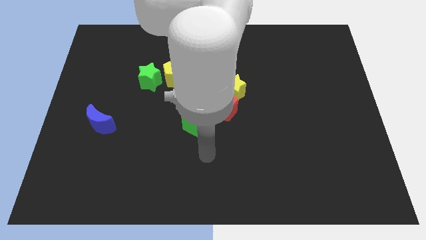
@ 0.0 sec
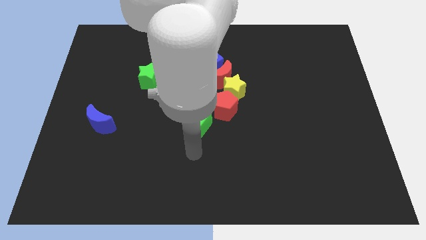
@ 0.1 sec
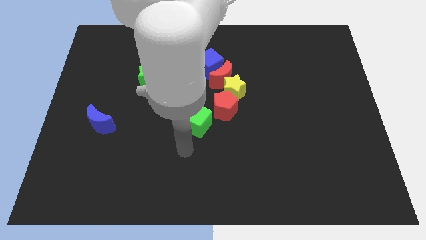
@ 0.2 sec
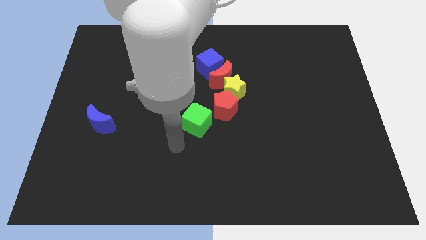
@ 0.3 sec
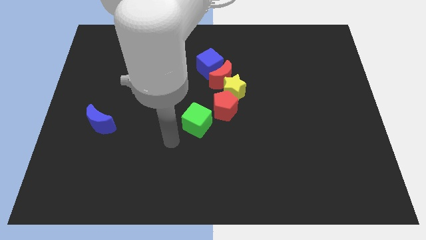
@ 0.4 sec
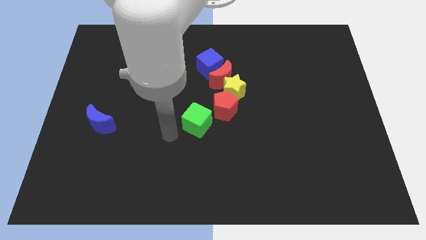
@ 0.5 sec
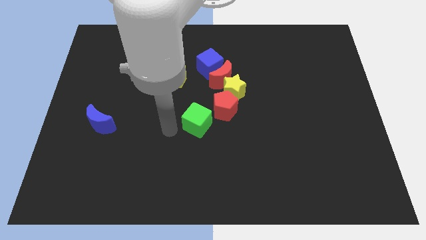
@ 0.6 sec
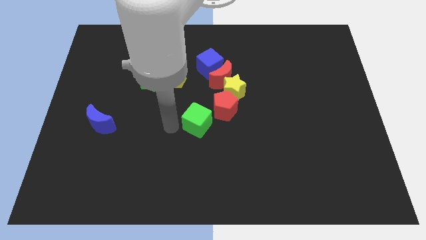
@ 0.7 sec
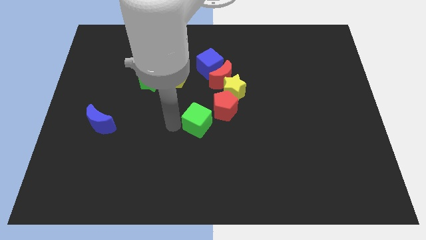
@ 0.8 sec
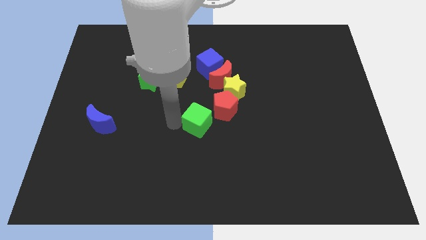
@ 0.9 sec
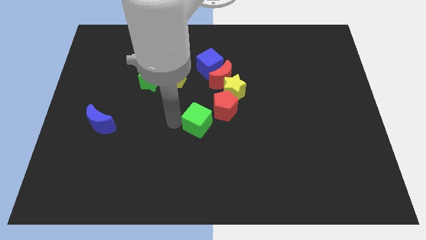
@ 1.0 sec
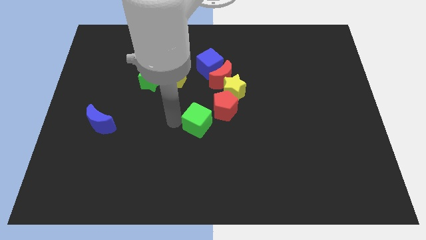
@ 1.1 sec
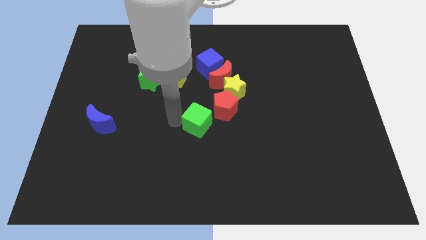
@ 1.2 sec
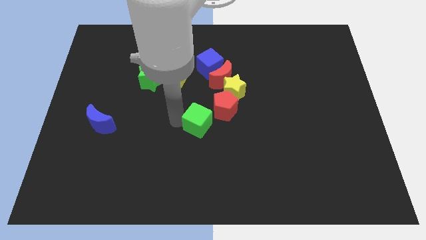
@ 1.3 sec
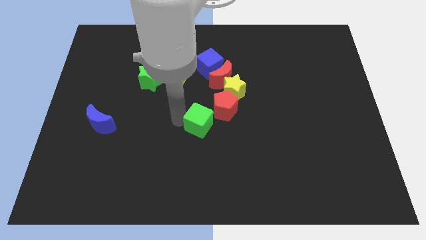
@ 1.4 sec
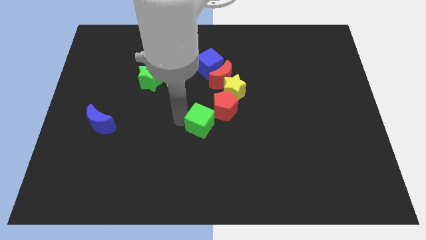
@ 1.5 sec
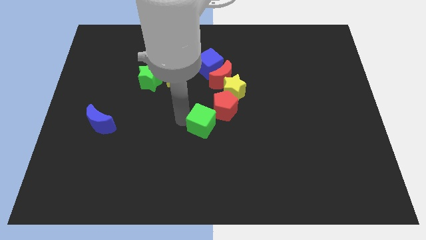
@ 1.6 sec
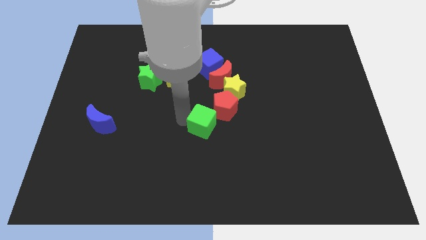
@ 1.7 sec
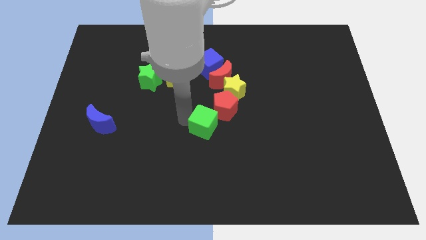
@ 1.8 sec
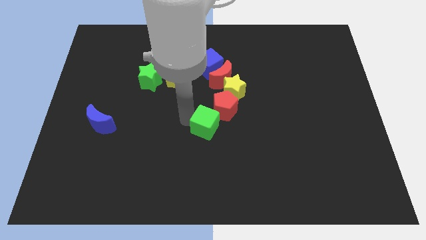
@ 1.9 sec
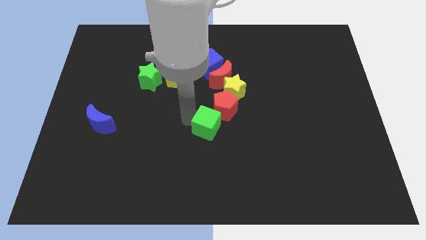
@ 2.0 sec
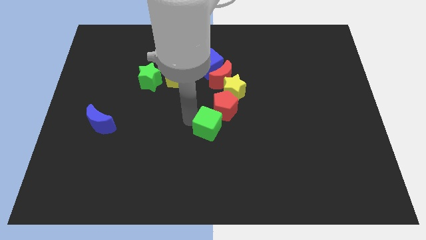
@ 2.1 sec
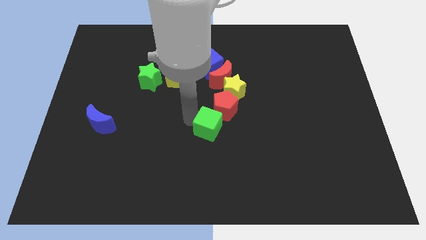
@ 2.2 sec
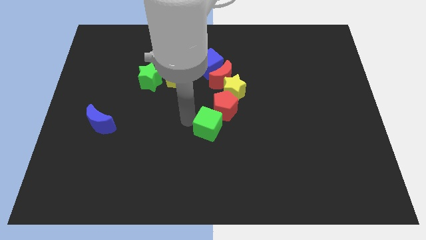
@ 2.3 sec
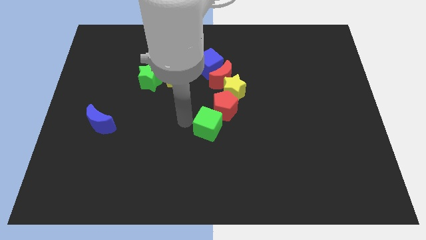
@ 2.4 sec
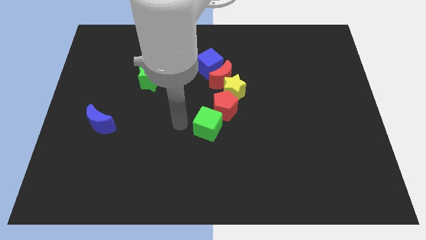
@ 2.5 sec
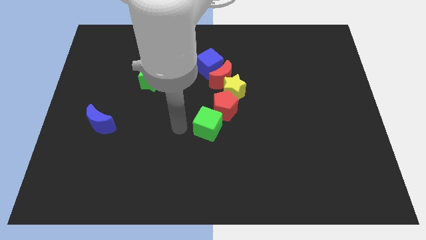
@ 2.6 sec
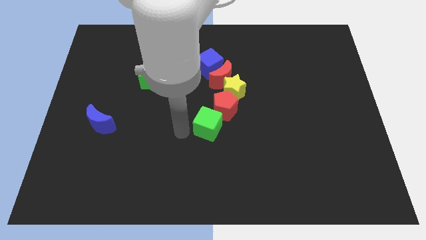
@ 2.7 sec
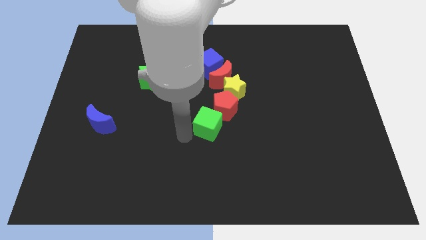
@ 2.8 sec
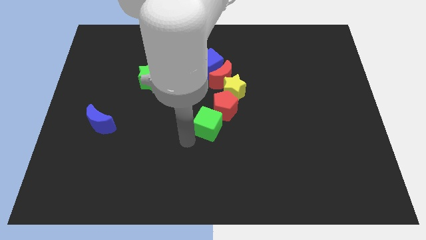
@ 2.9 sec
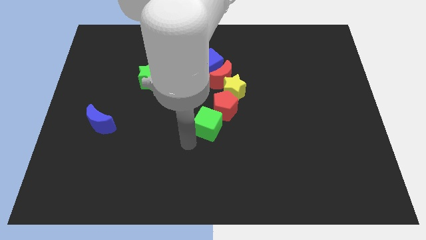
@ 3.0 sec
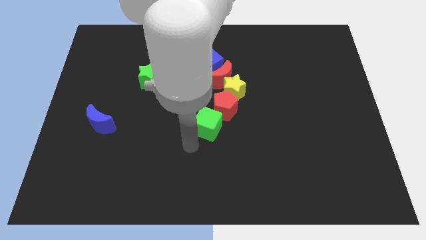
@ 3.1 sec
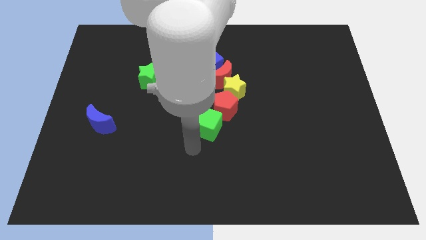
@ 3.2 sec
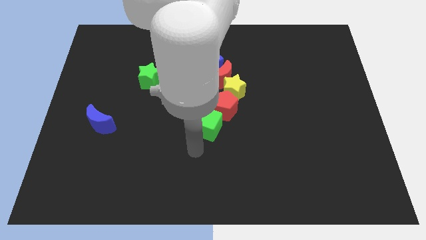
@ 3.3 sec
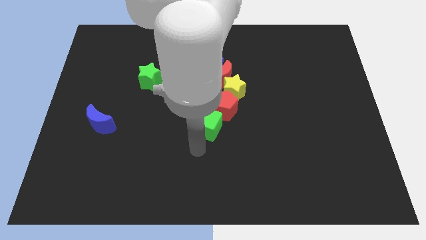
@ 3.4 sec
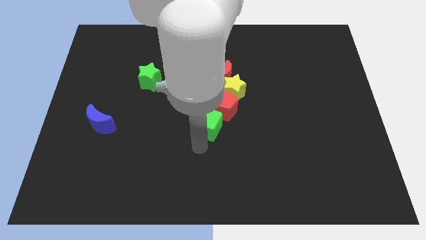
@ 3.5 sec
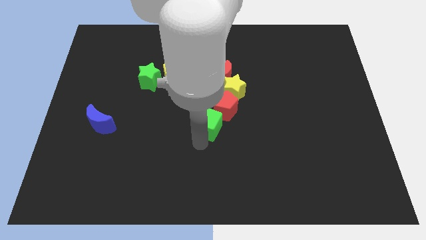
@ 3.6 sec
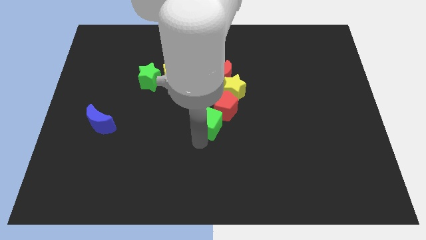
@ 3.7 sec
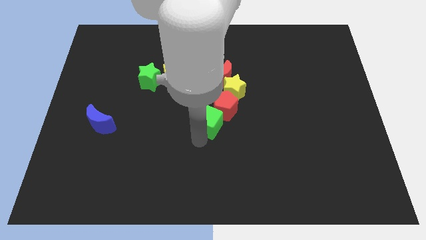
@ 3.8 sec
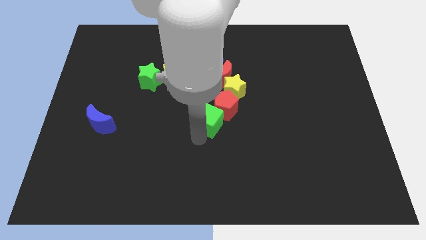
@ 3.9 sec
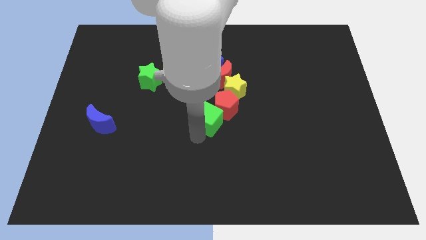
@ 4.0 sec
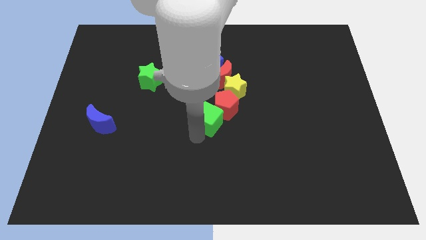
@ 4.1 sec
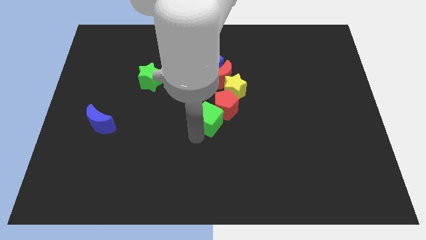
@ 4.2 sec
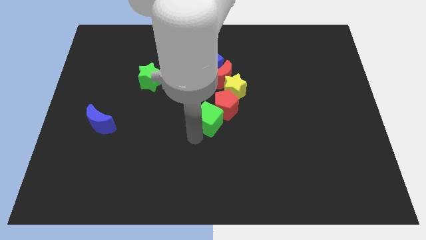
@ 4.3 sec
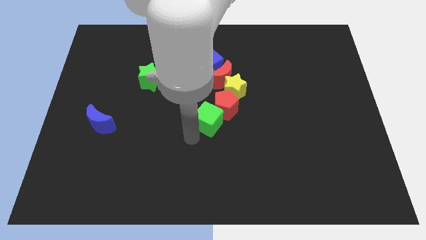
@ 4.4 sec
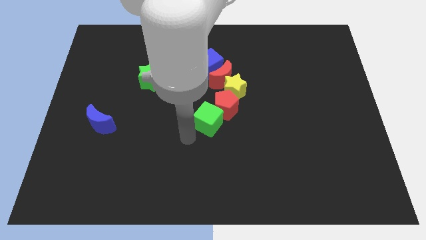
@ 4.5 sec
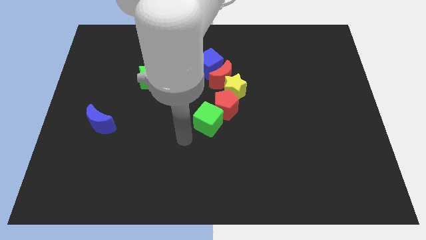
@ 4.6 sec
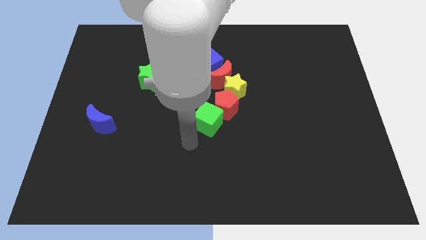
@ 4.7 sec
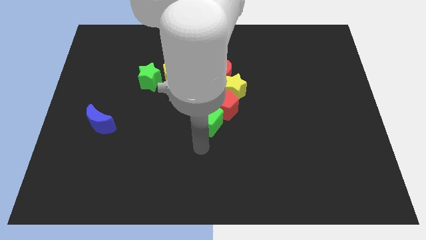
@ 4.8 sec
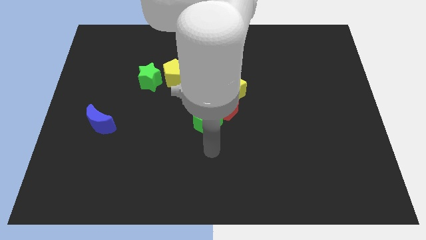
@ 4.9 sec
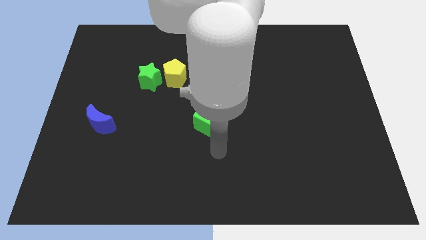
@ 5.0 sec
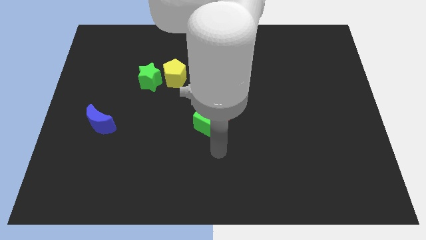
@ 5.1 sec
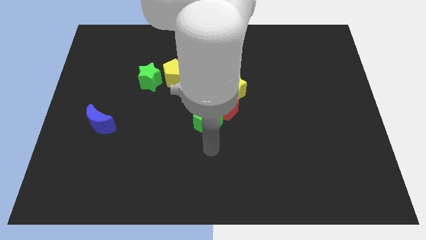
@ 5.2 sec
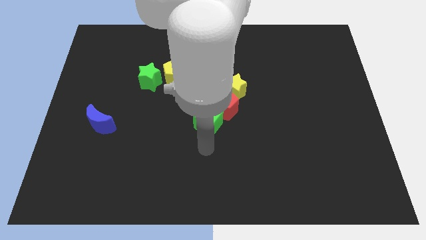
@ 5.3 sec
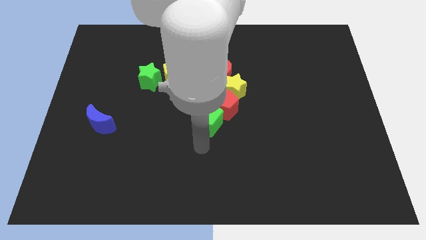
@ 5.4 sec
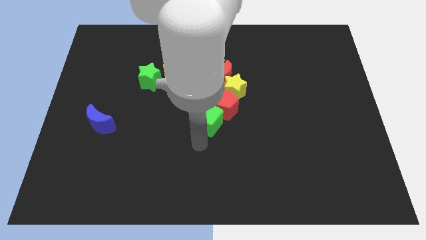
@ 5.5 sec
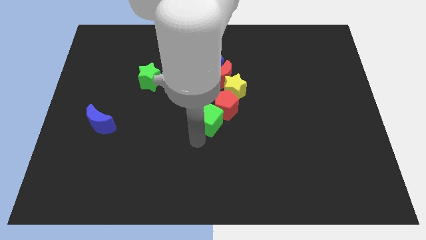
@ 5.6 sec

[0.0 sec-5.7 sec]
push the green cube into red pentagon

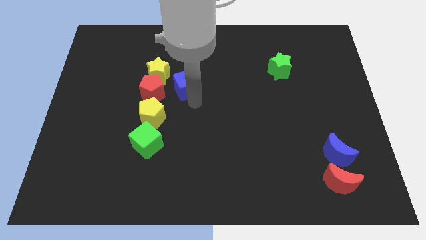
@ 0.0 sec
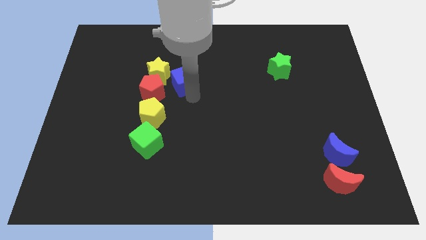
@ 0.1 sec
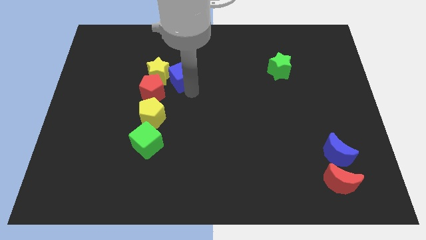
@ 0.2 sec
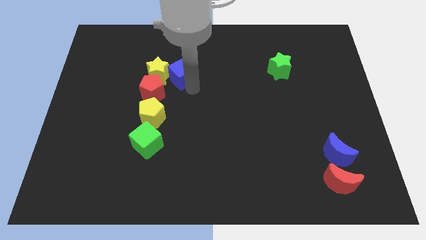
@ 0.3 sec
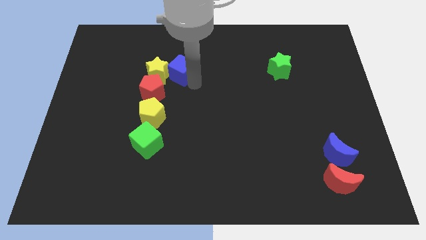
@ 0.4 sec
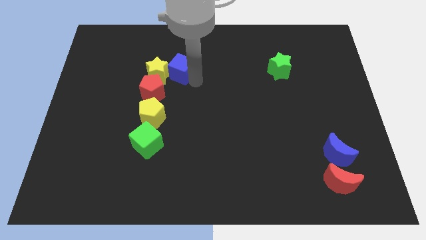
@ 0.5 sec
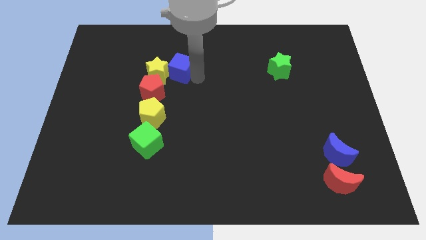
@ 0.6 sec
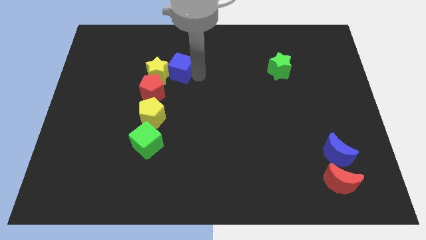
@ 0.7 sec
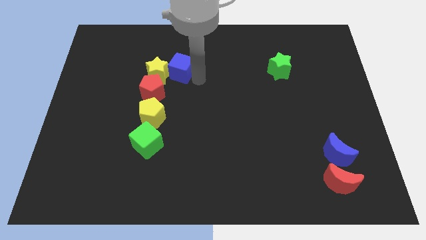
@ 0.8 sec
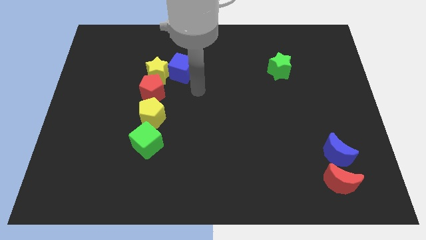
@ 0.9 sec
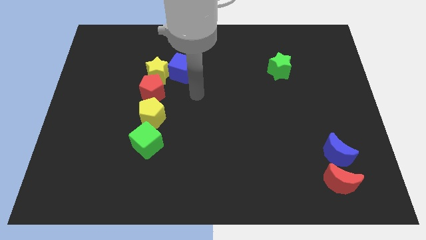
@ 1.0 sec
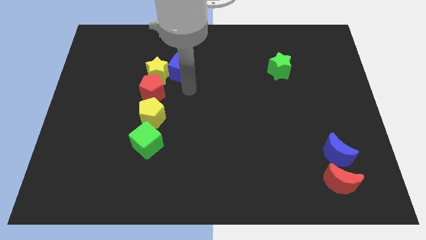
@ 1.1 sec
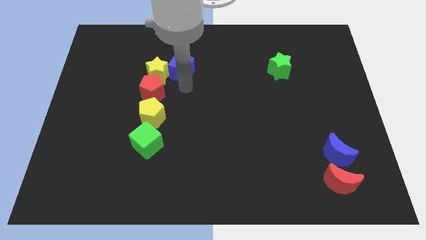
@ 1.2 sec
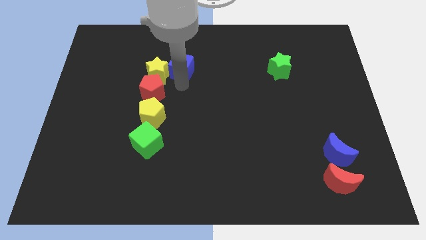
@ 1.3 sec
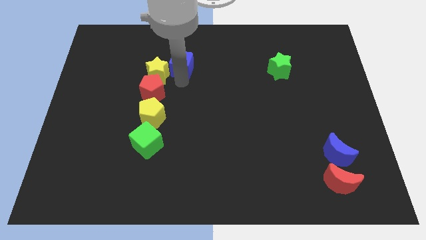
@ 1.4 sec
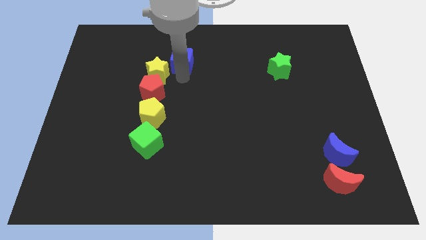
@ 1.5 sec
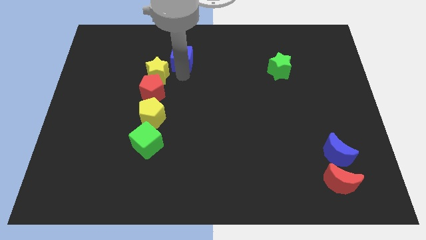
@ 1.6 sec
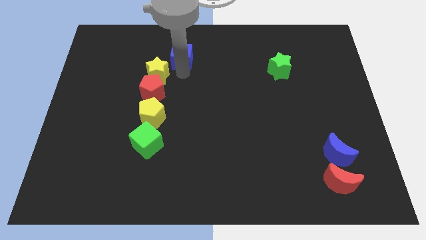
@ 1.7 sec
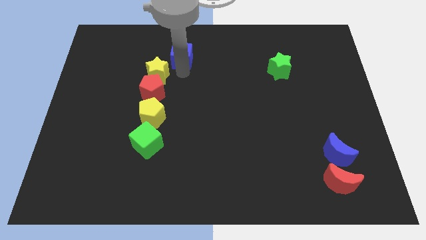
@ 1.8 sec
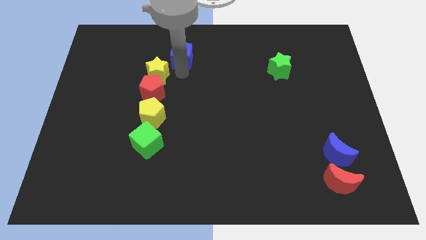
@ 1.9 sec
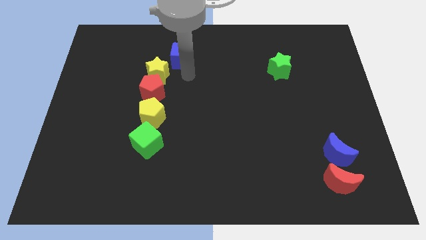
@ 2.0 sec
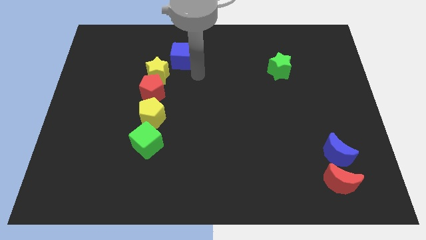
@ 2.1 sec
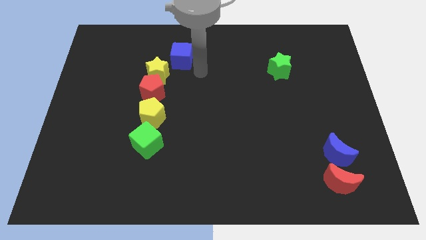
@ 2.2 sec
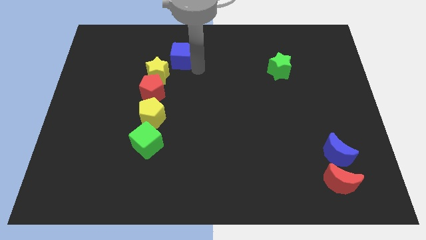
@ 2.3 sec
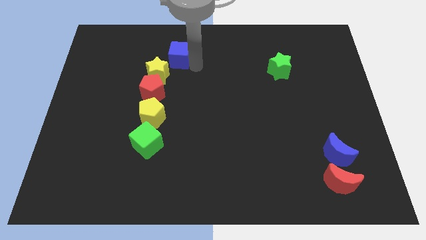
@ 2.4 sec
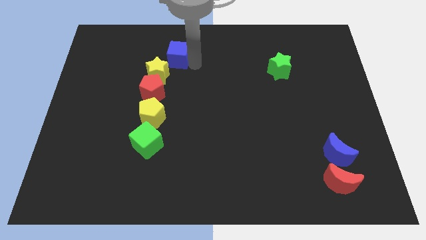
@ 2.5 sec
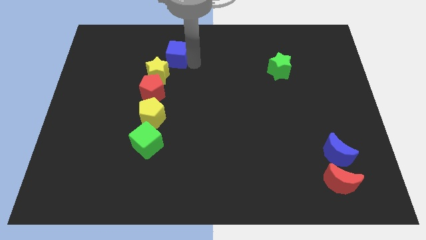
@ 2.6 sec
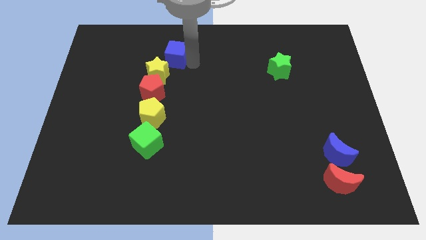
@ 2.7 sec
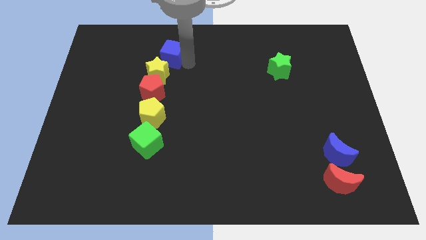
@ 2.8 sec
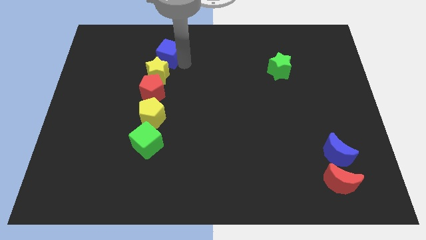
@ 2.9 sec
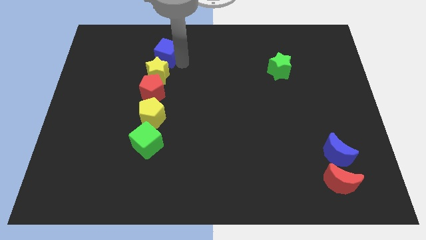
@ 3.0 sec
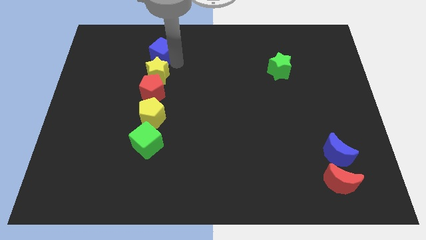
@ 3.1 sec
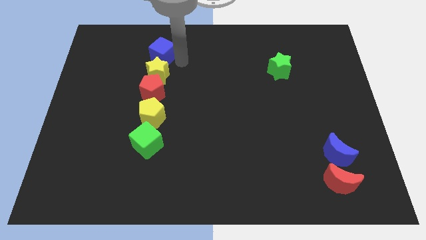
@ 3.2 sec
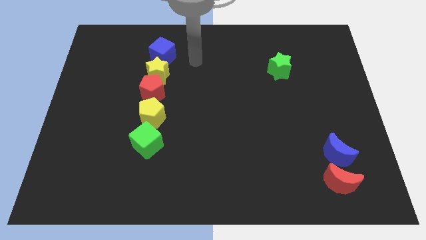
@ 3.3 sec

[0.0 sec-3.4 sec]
put the blue cube on the top side of the yellow star
